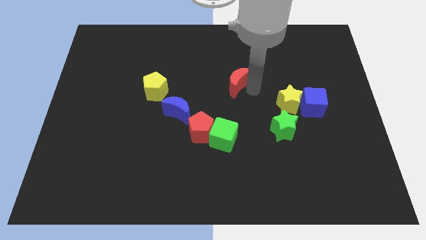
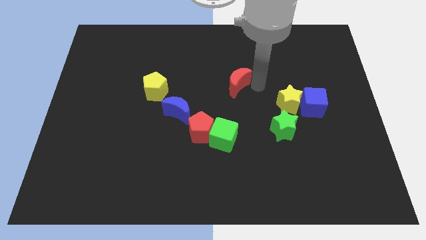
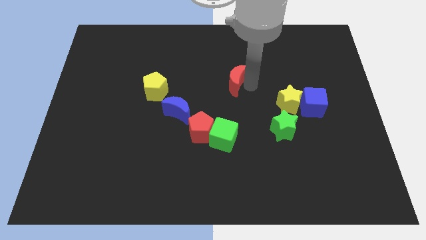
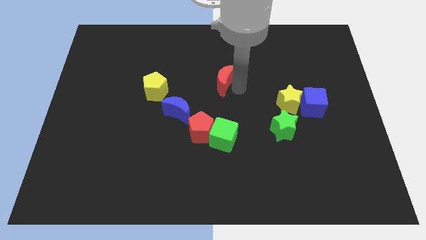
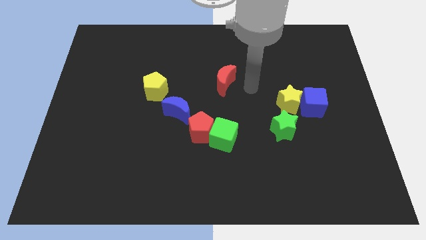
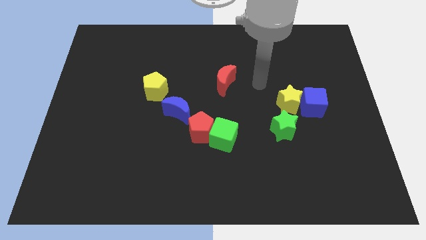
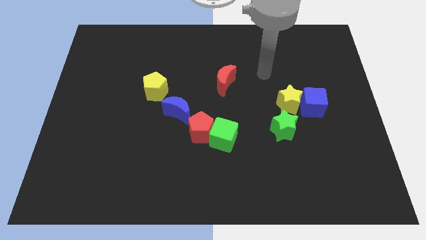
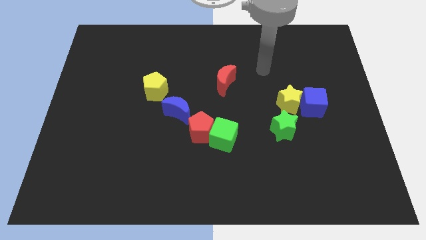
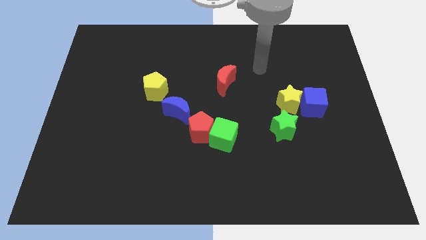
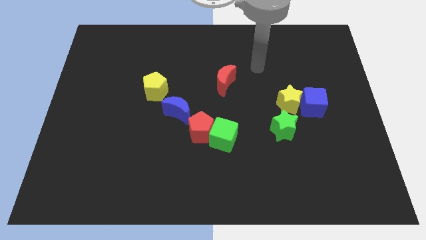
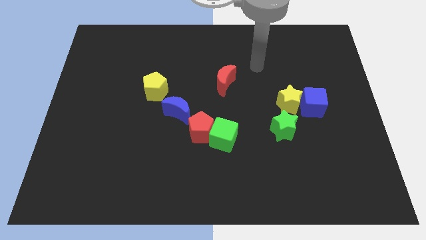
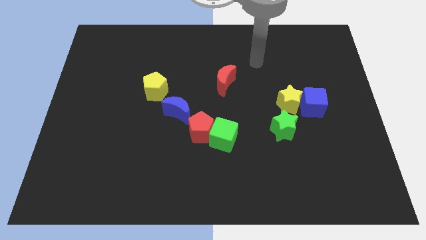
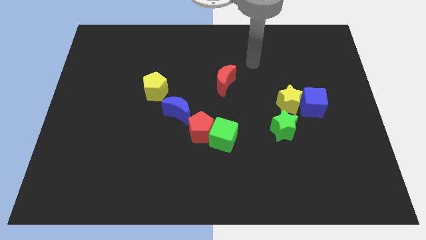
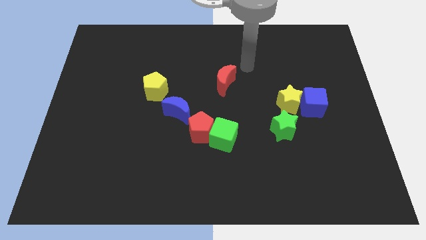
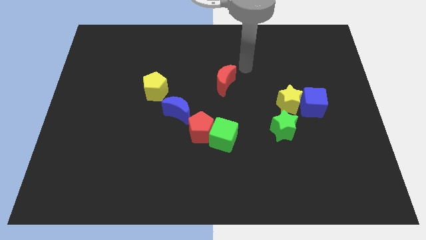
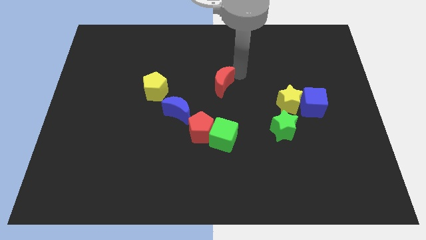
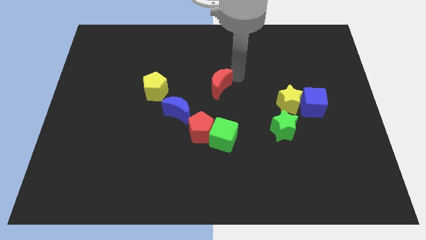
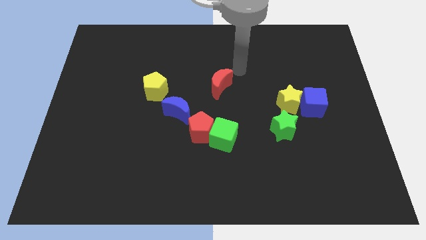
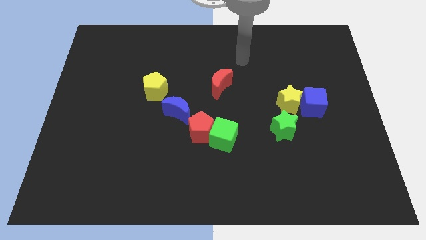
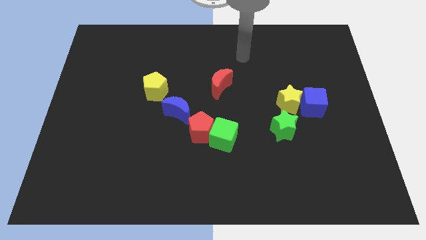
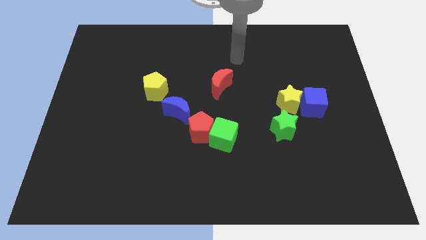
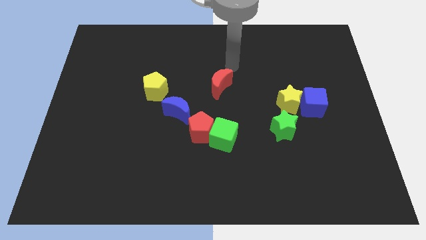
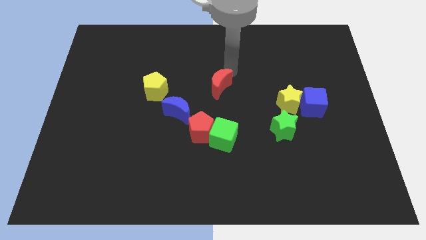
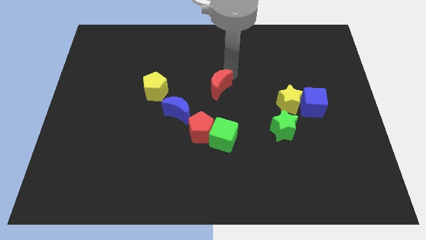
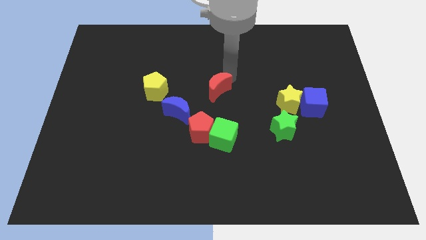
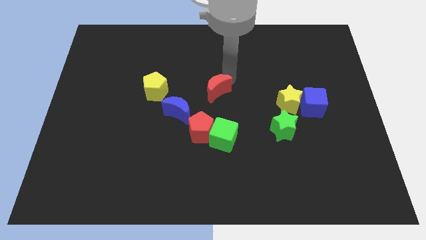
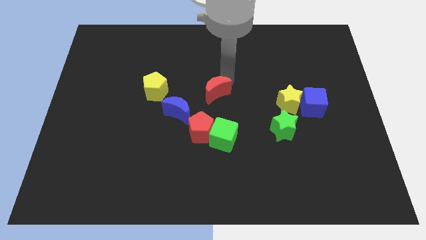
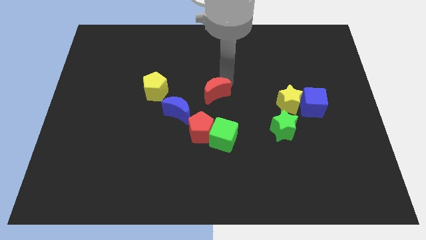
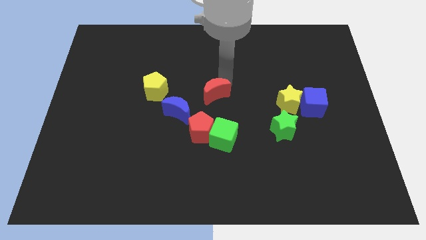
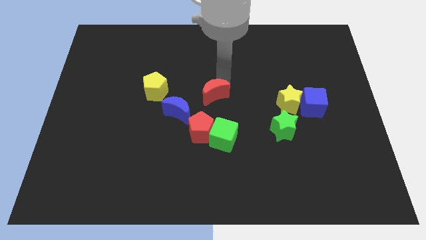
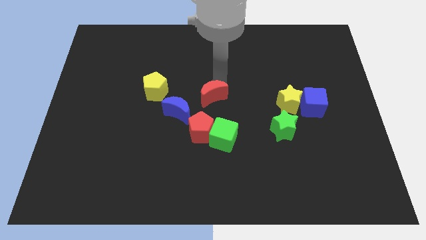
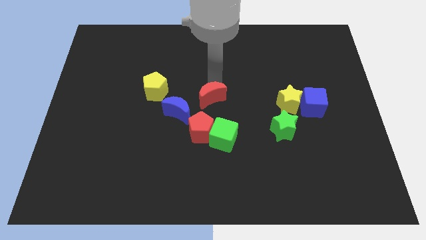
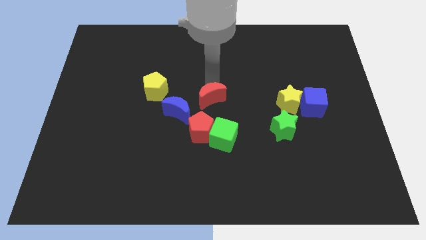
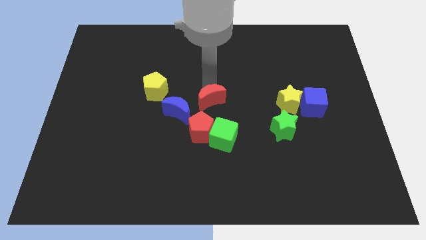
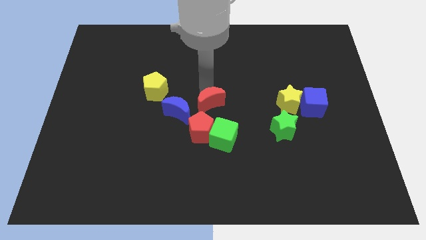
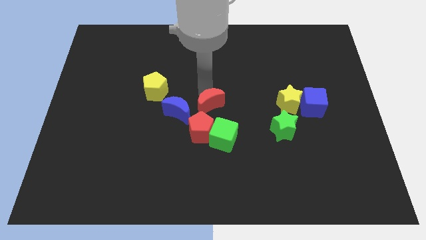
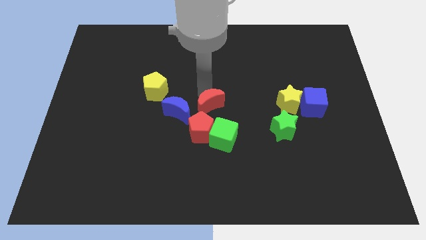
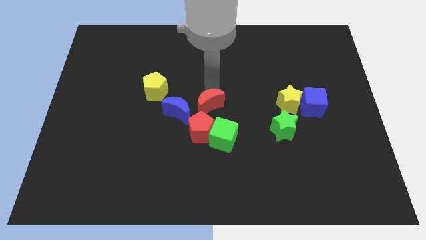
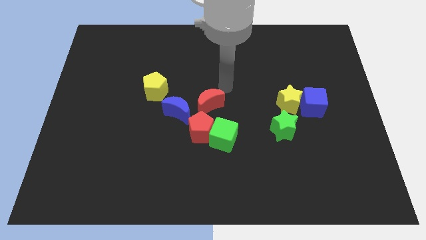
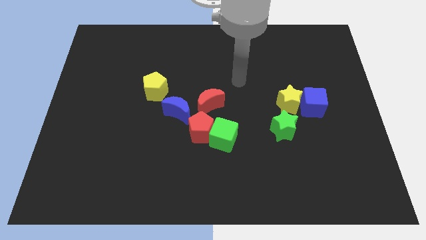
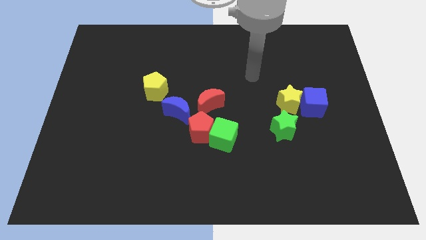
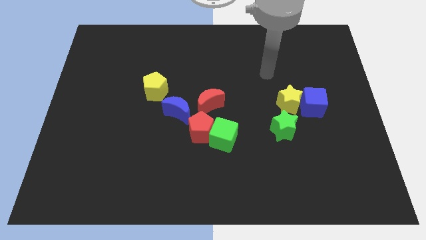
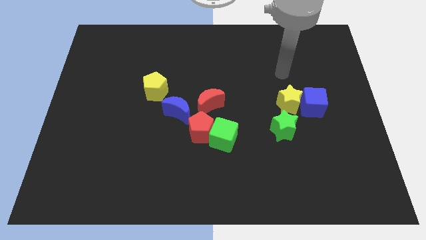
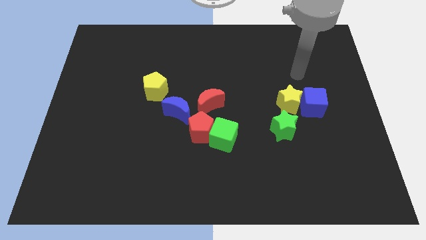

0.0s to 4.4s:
place the red moon to the right of the blue moon

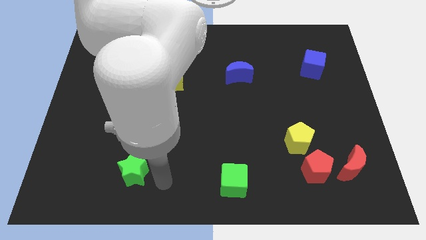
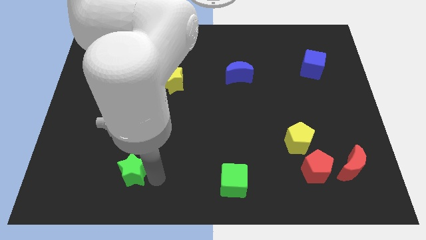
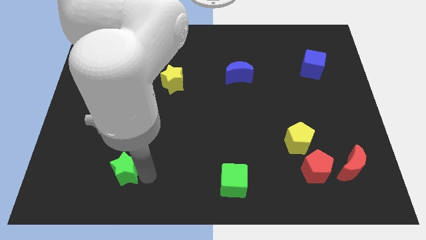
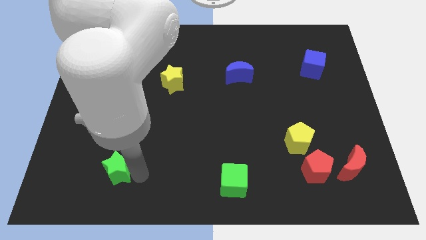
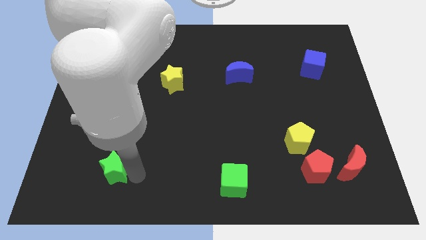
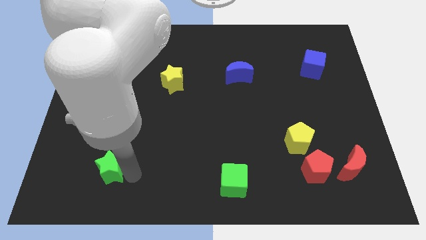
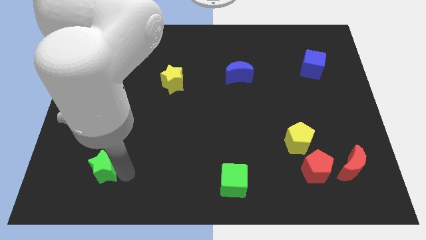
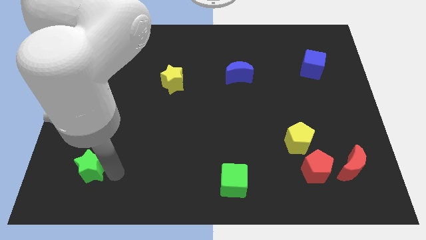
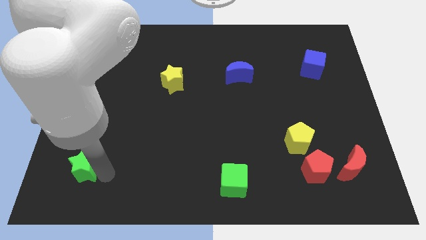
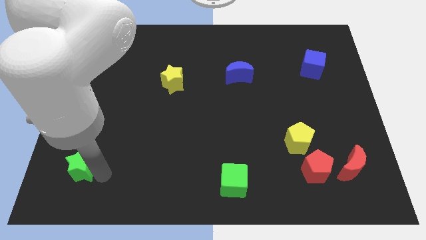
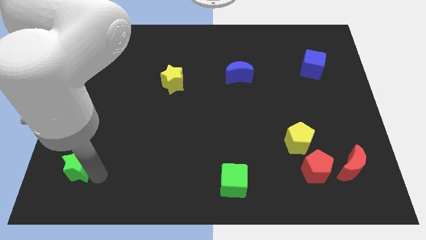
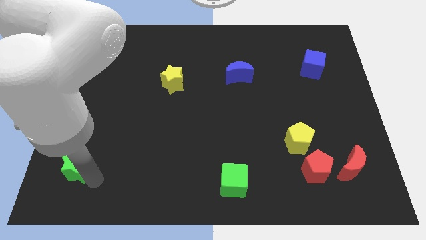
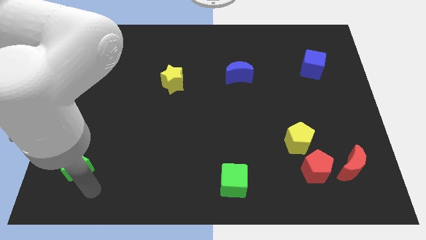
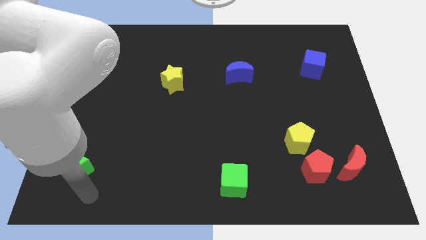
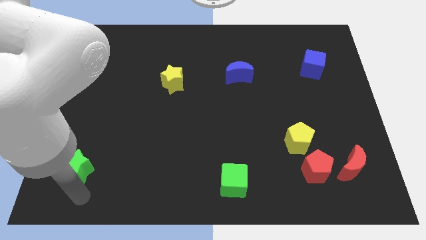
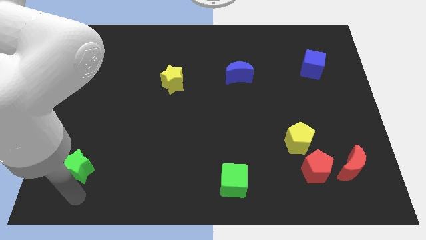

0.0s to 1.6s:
push green star towards the left of the board

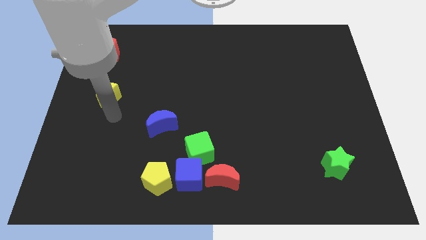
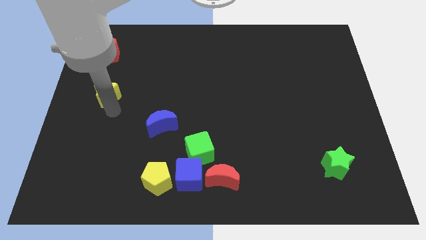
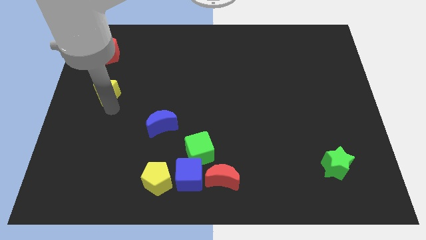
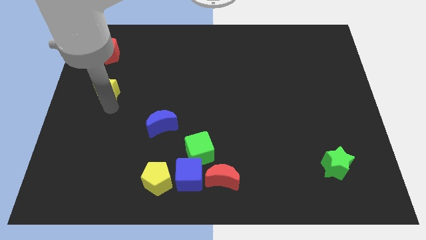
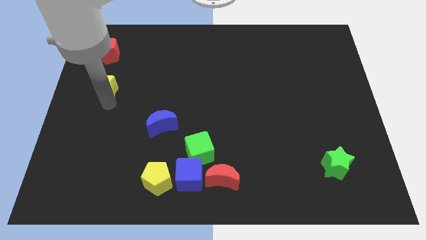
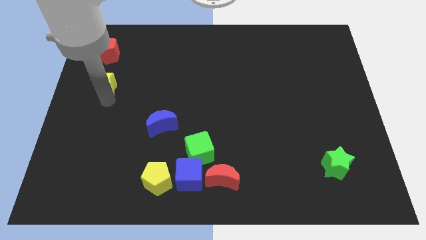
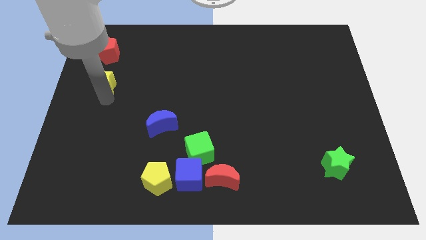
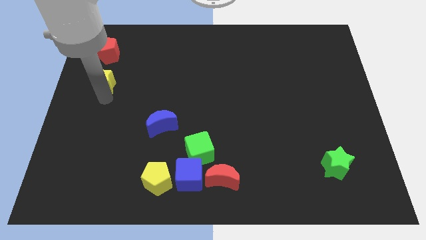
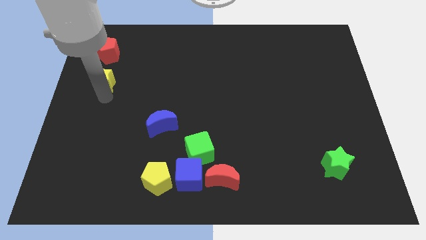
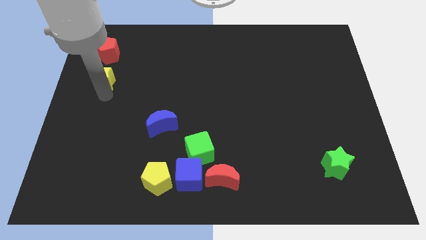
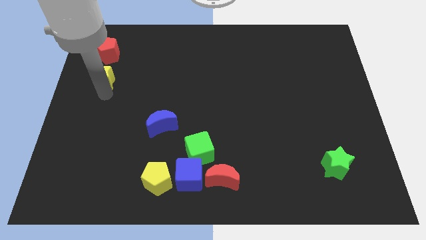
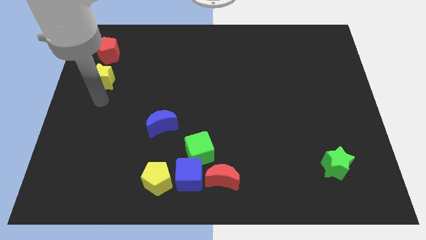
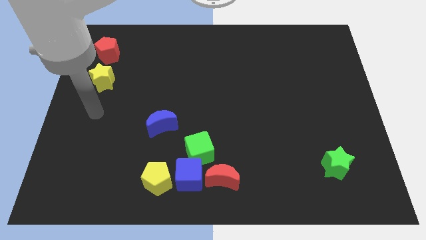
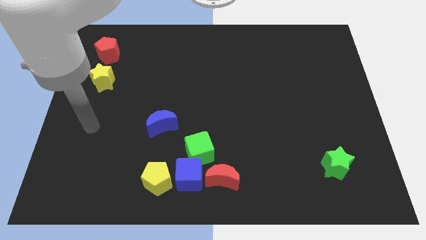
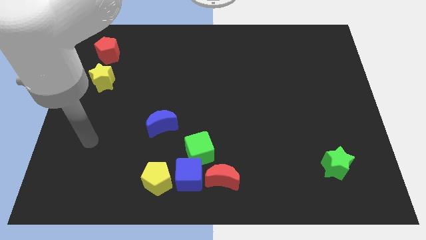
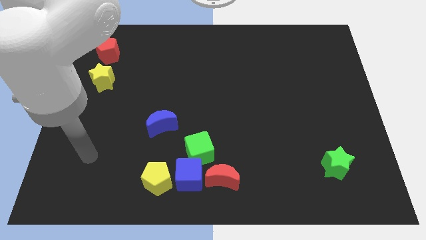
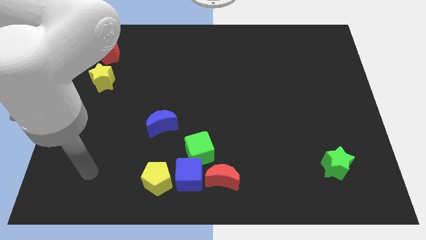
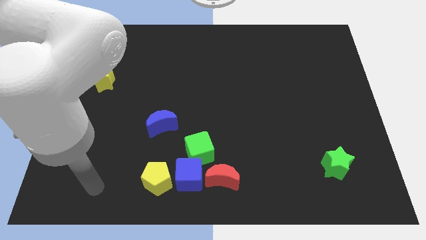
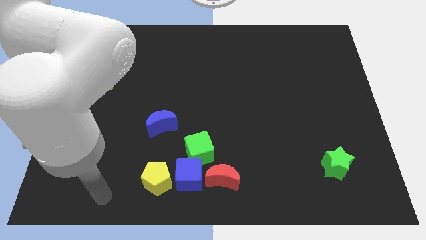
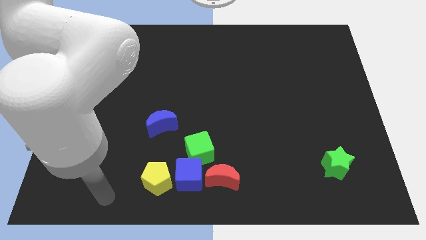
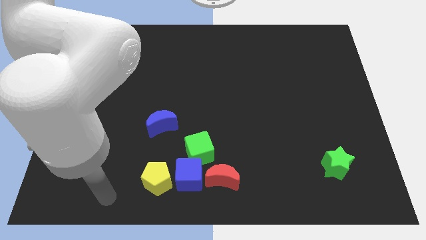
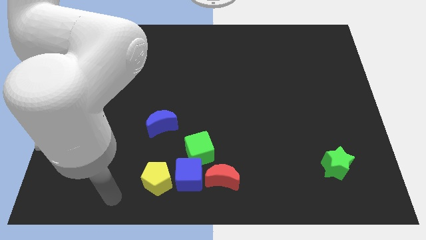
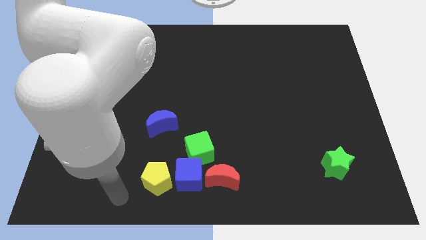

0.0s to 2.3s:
move the yellow star closer to the red pentagon

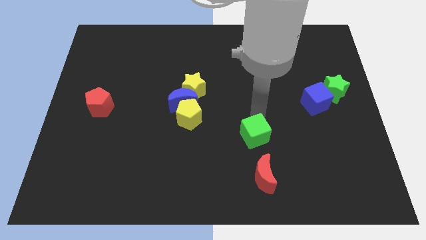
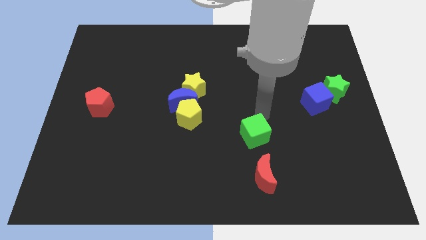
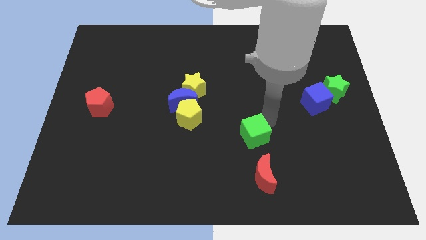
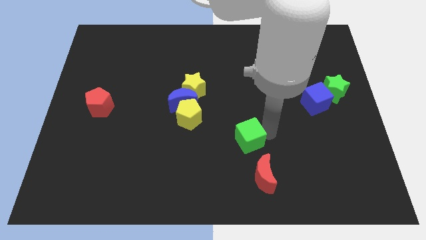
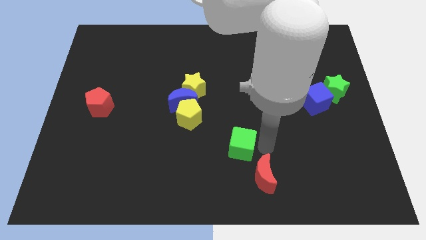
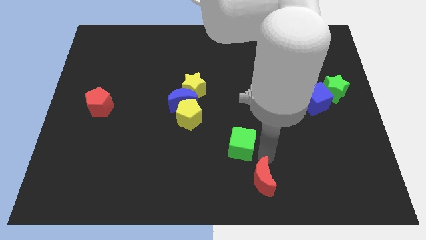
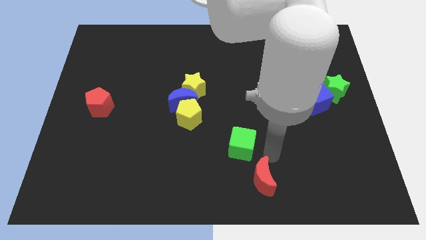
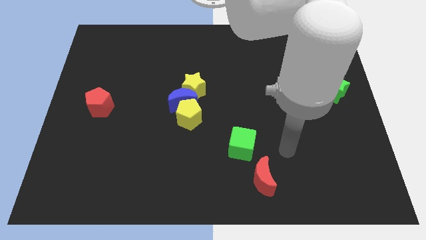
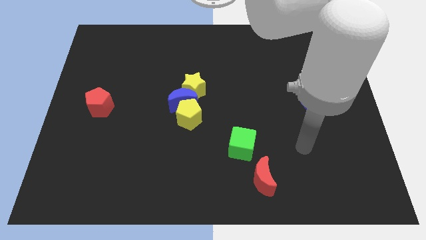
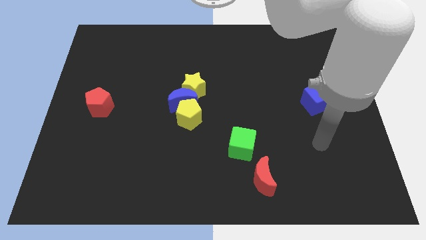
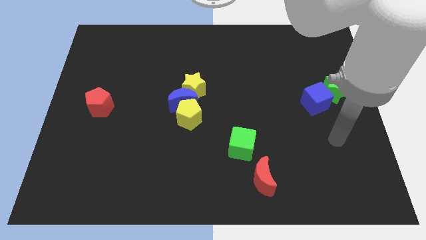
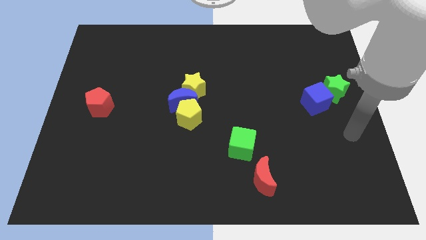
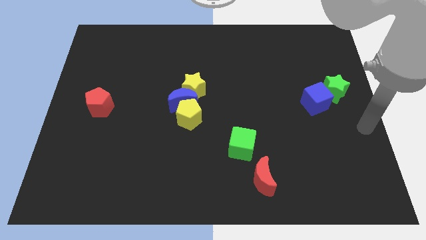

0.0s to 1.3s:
put the green cube diagonally top left to the red crescent
